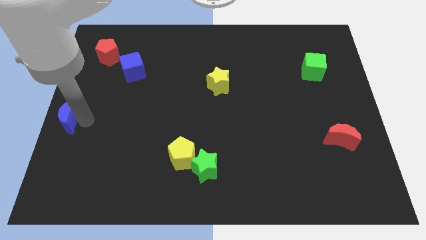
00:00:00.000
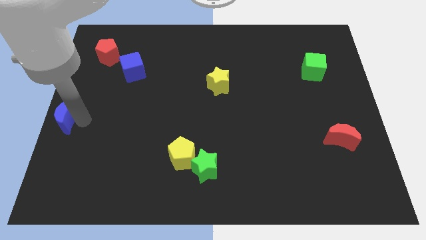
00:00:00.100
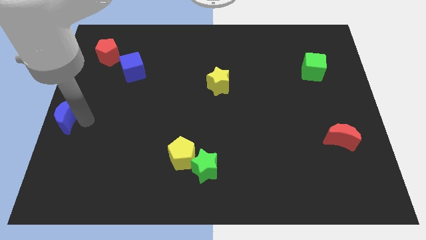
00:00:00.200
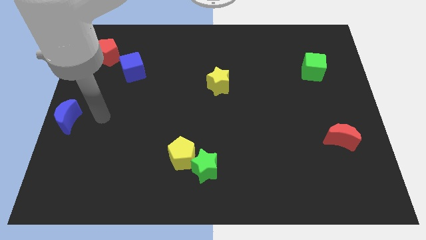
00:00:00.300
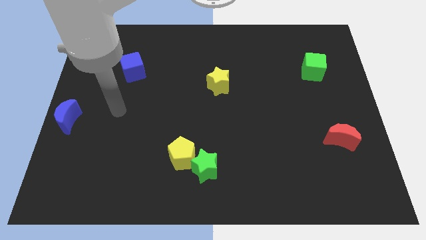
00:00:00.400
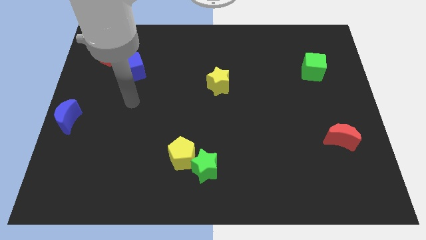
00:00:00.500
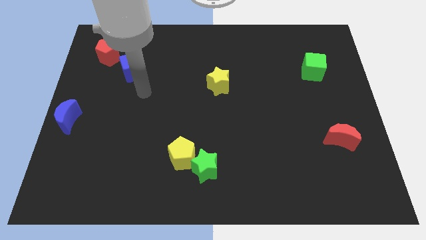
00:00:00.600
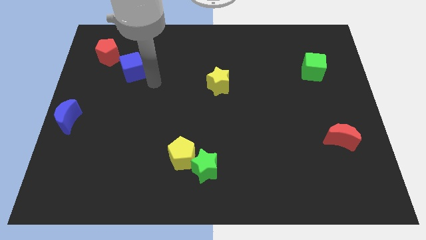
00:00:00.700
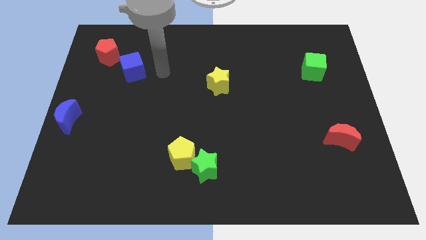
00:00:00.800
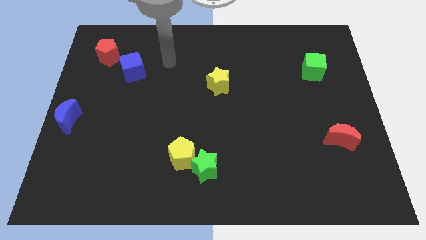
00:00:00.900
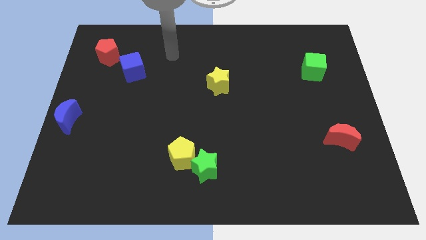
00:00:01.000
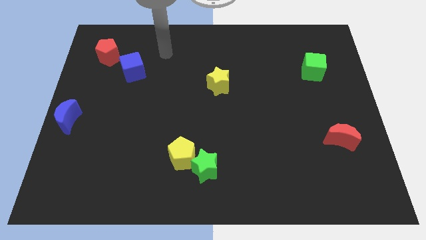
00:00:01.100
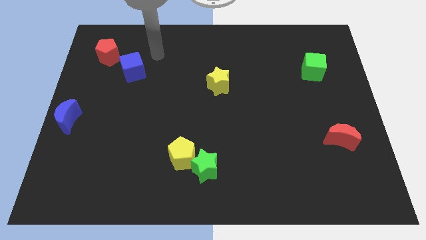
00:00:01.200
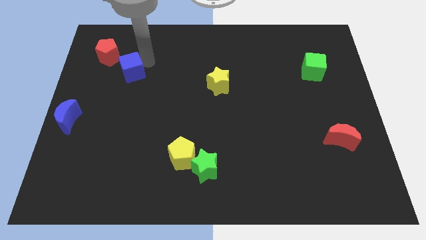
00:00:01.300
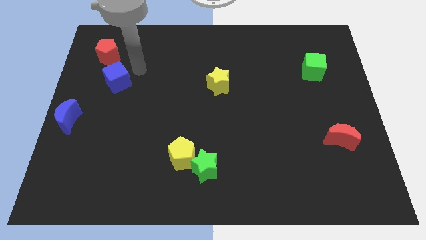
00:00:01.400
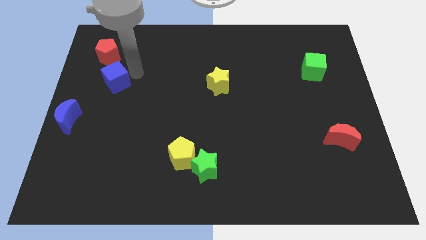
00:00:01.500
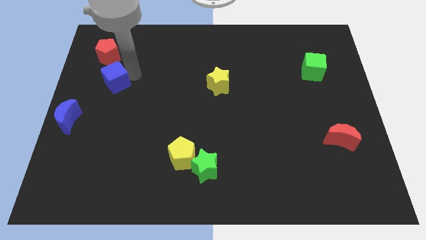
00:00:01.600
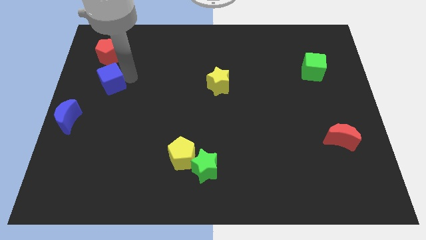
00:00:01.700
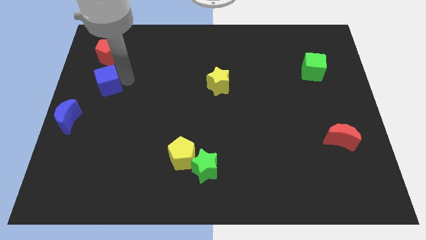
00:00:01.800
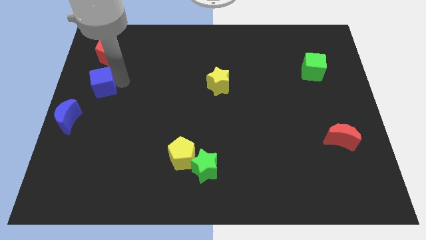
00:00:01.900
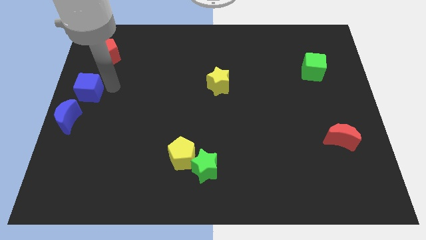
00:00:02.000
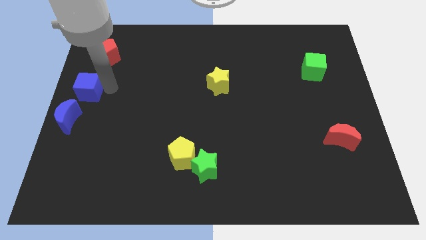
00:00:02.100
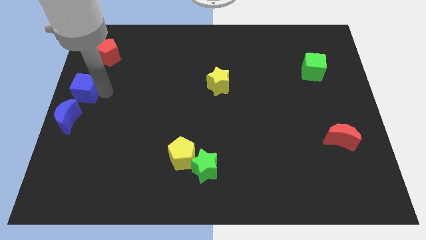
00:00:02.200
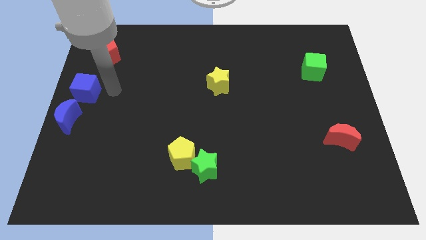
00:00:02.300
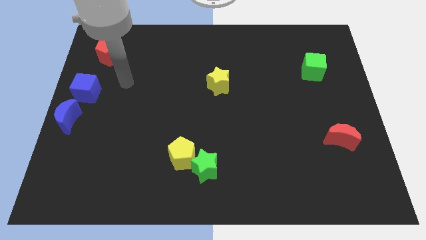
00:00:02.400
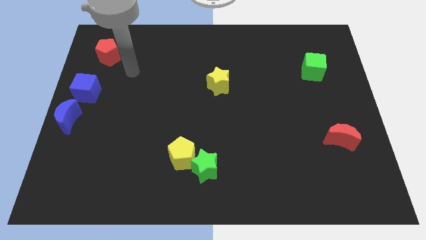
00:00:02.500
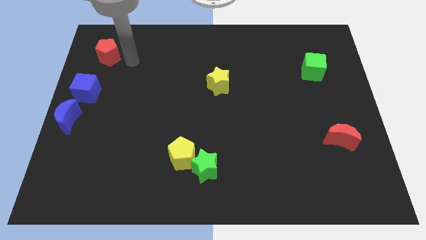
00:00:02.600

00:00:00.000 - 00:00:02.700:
move the blue cube above the blue crescent

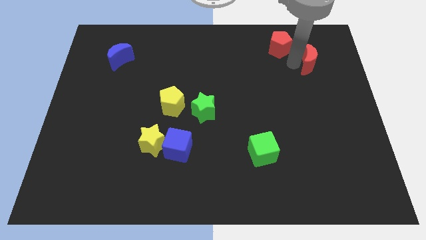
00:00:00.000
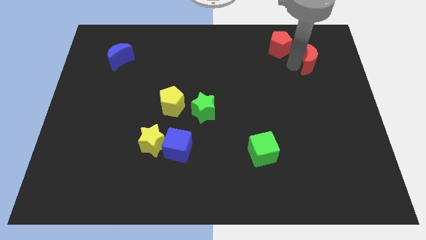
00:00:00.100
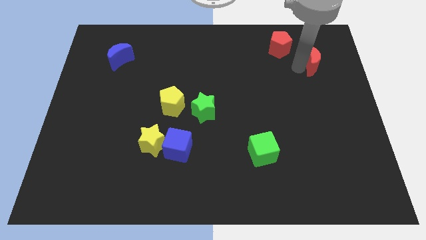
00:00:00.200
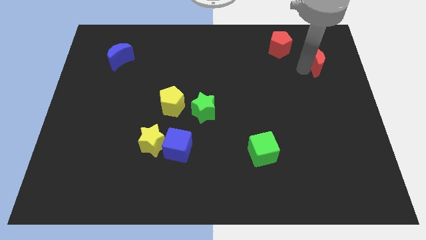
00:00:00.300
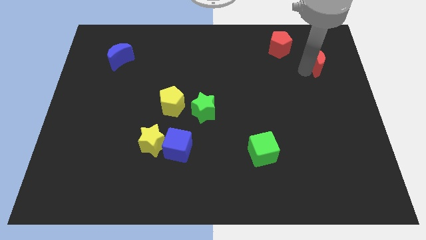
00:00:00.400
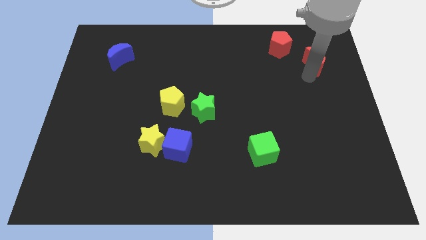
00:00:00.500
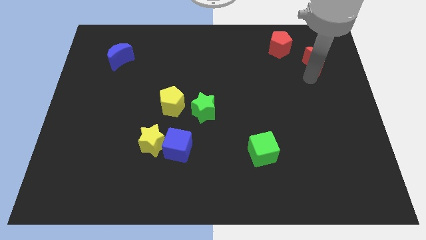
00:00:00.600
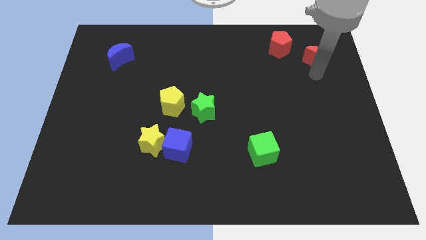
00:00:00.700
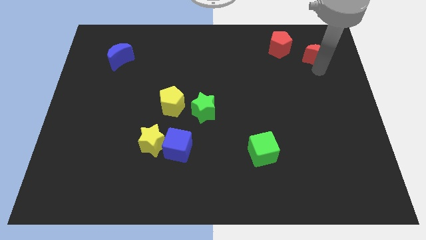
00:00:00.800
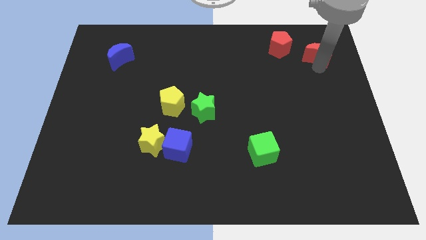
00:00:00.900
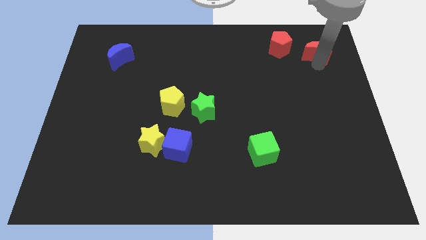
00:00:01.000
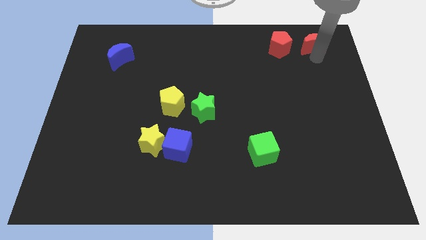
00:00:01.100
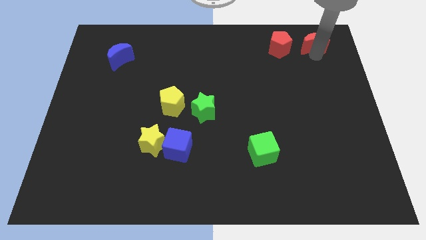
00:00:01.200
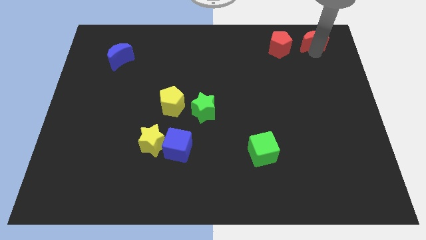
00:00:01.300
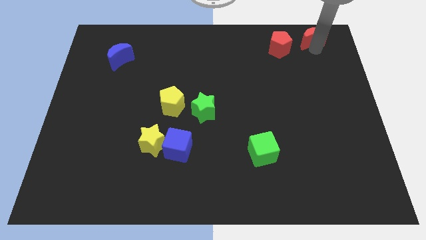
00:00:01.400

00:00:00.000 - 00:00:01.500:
move the red crescent to the right of the red pentagon

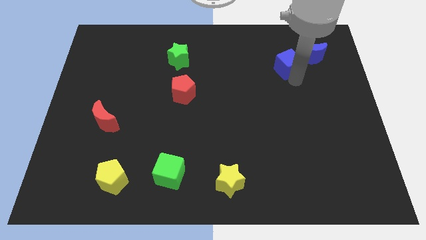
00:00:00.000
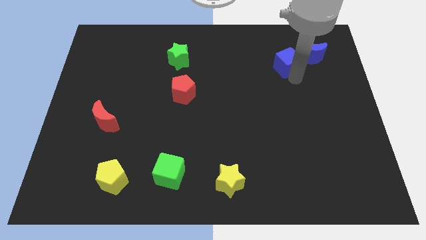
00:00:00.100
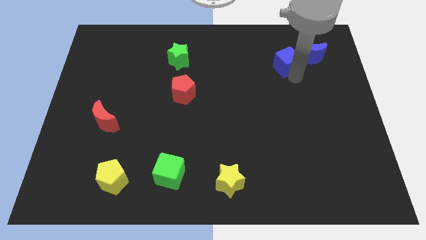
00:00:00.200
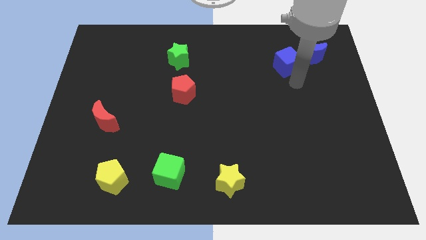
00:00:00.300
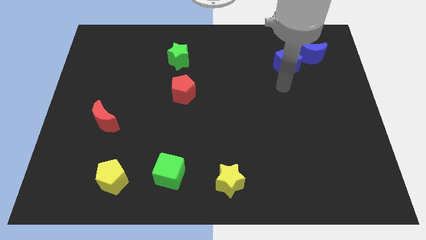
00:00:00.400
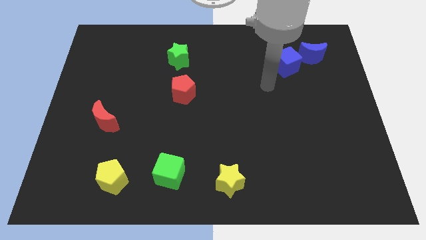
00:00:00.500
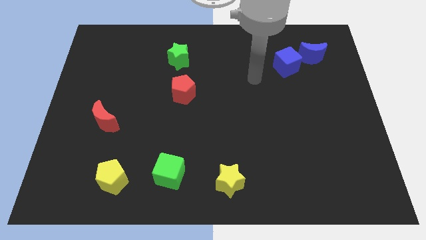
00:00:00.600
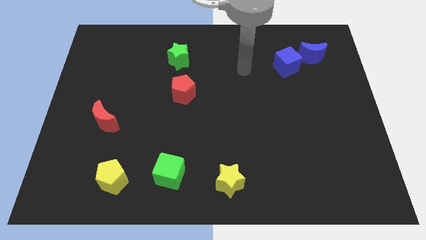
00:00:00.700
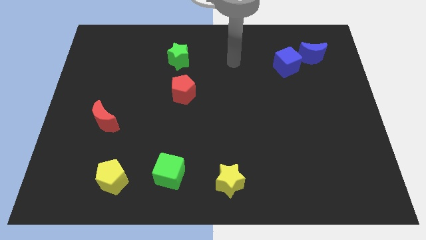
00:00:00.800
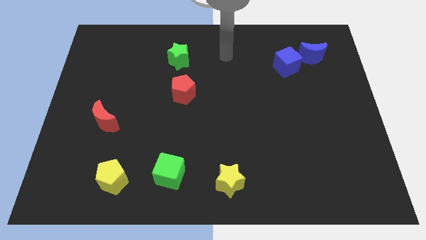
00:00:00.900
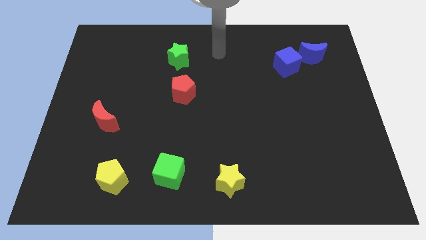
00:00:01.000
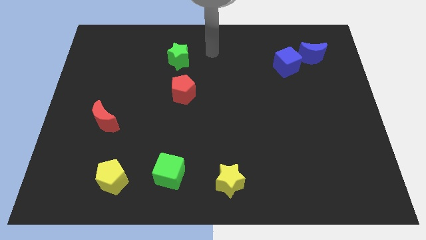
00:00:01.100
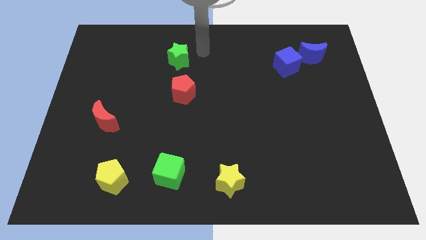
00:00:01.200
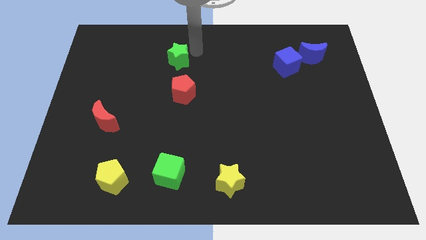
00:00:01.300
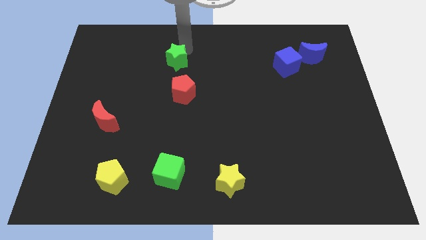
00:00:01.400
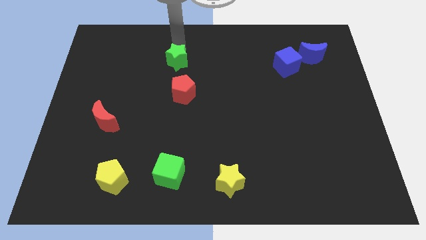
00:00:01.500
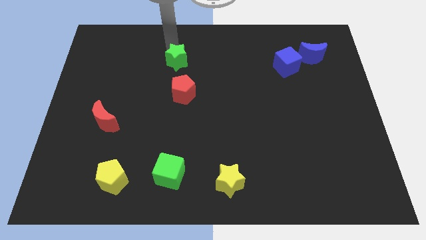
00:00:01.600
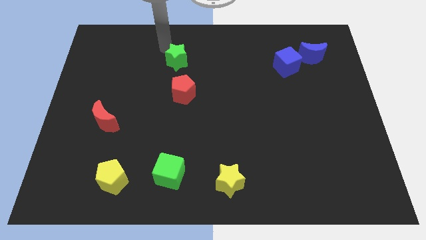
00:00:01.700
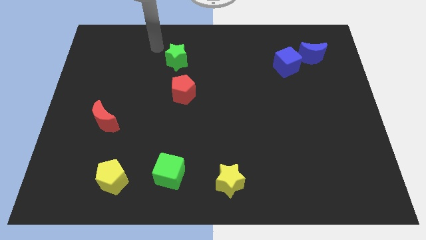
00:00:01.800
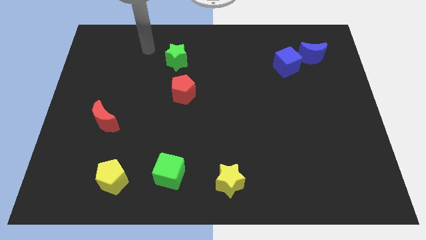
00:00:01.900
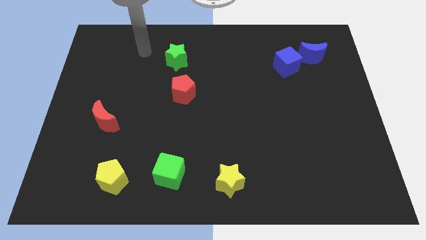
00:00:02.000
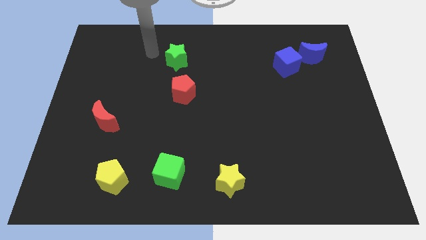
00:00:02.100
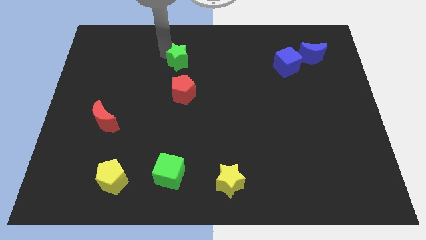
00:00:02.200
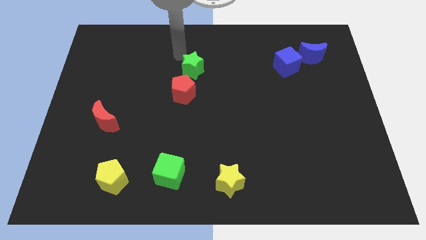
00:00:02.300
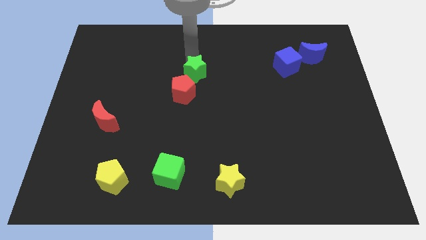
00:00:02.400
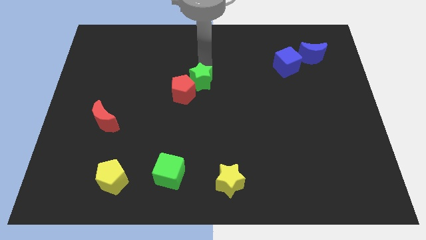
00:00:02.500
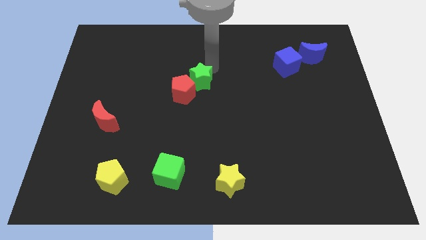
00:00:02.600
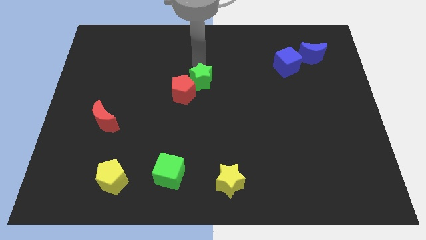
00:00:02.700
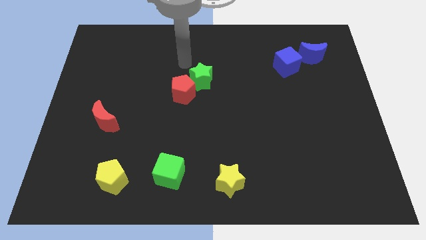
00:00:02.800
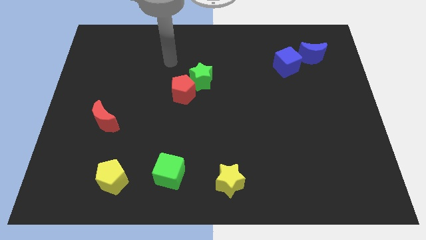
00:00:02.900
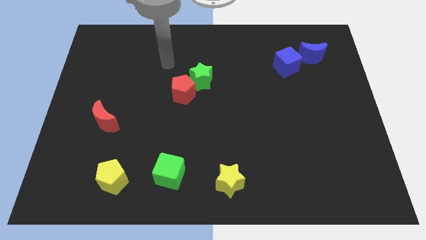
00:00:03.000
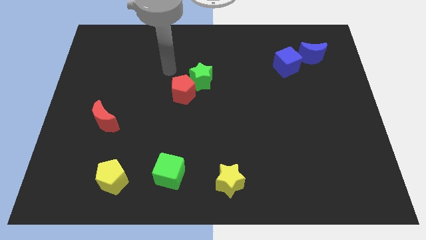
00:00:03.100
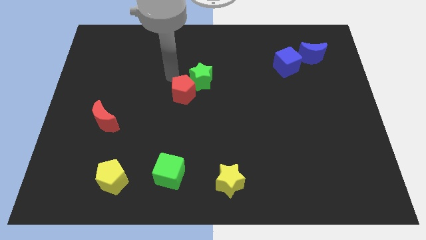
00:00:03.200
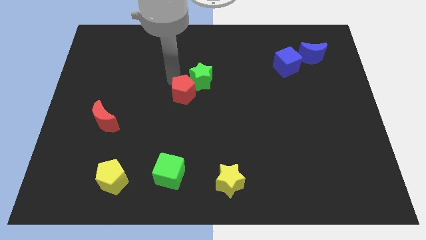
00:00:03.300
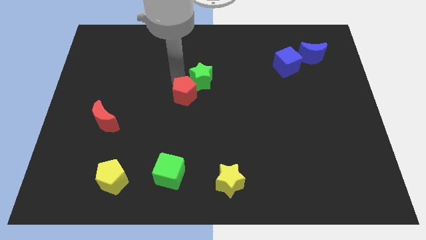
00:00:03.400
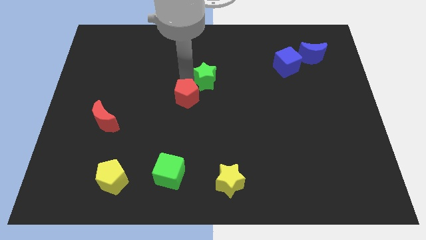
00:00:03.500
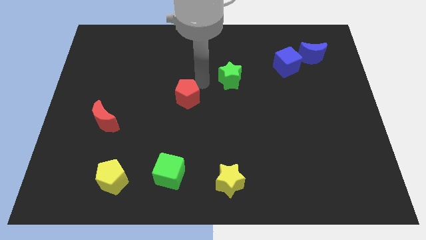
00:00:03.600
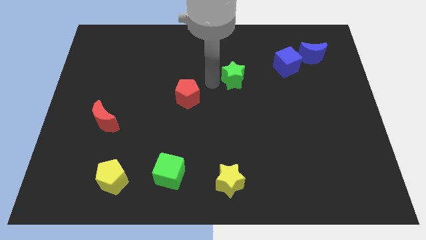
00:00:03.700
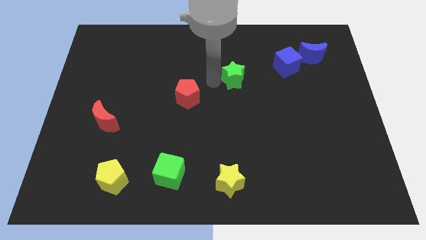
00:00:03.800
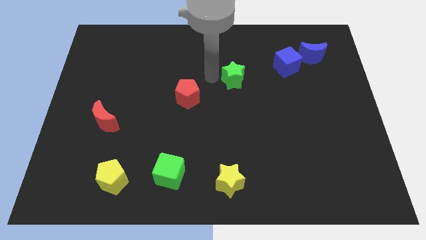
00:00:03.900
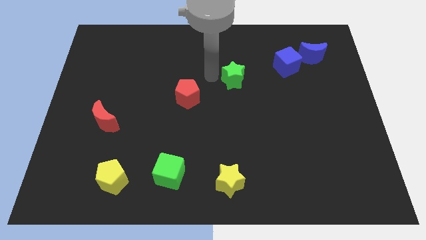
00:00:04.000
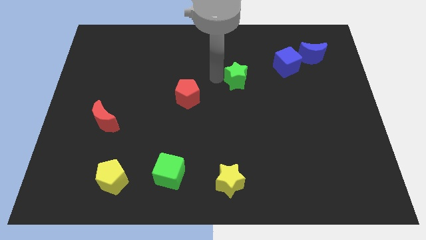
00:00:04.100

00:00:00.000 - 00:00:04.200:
place the green star between red pentagon and blue cube

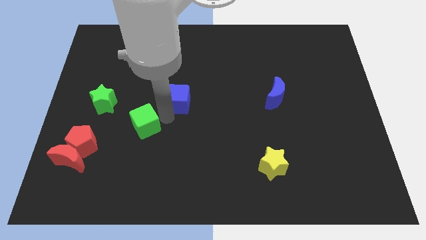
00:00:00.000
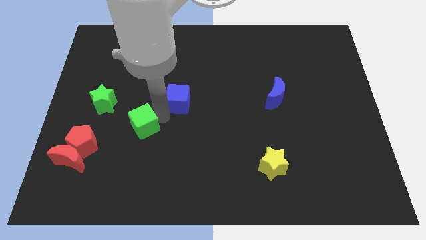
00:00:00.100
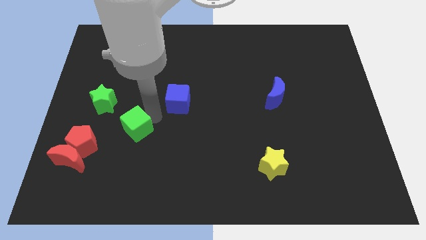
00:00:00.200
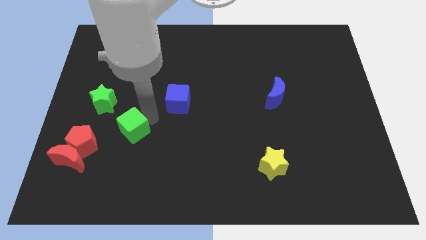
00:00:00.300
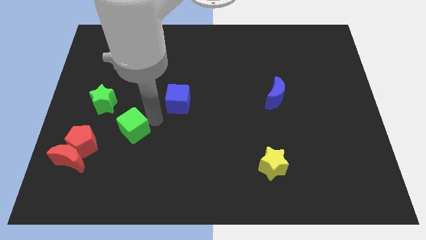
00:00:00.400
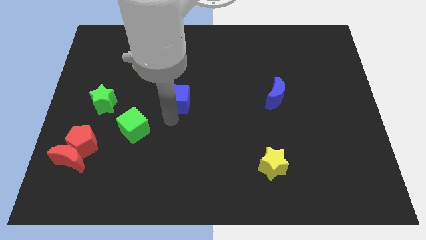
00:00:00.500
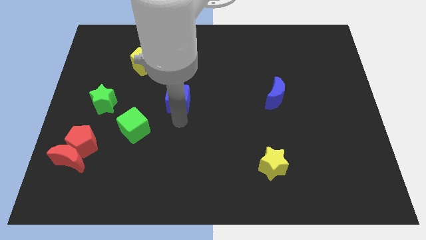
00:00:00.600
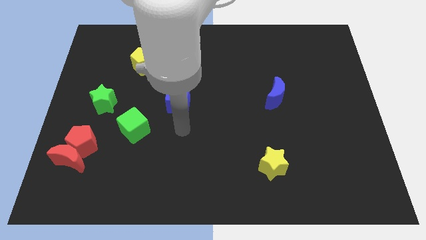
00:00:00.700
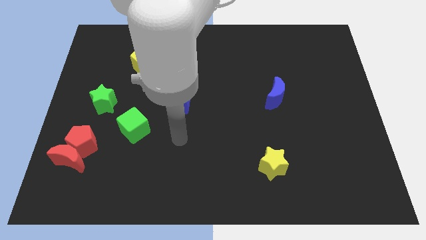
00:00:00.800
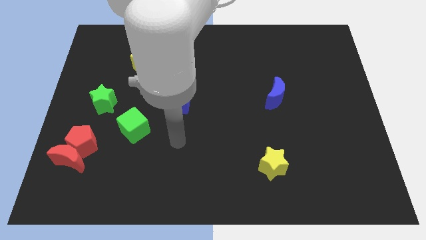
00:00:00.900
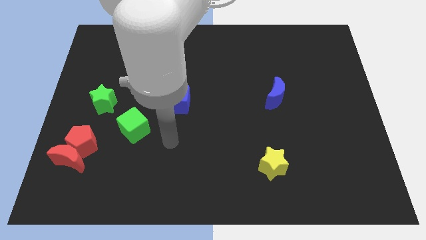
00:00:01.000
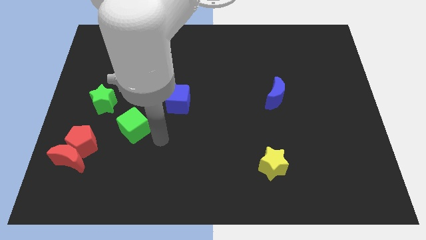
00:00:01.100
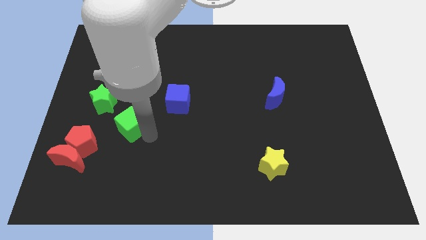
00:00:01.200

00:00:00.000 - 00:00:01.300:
move the green cube slightly towards the red pentagon
